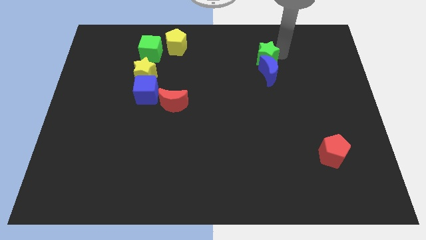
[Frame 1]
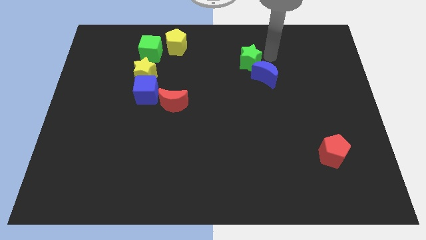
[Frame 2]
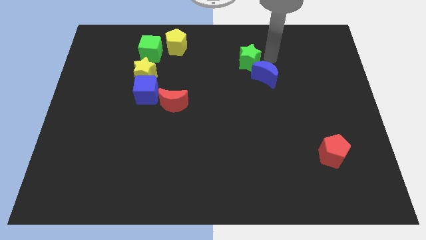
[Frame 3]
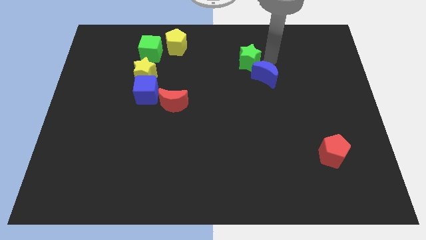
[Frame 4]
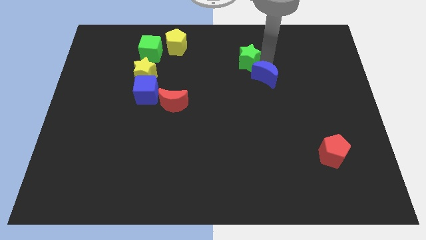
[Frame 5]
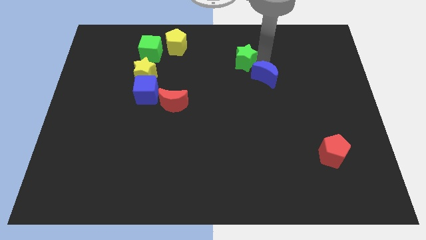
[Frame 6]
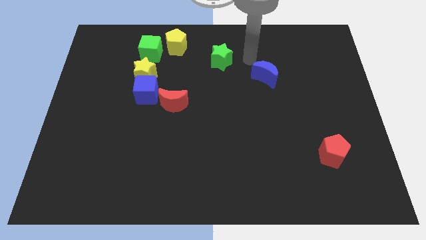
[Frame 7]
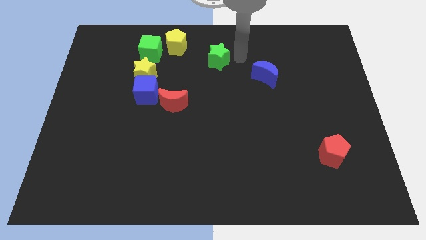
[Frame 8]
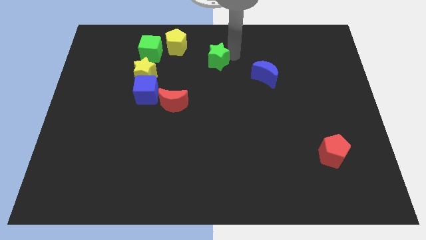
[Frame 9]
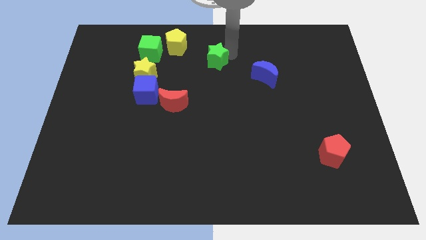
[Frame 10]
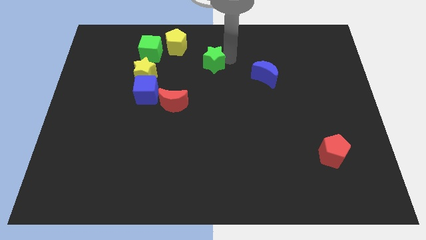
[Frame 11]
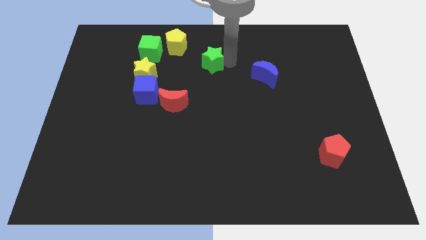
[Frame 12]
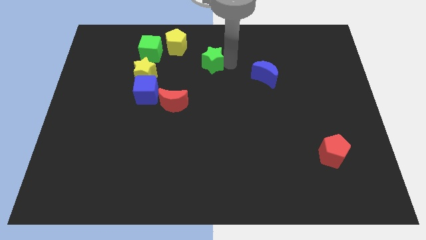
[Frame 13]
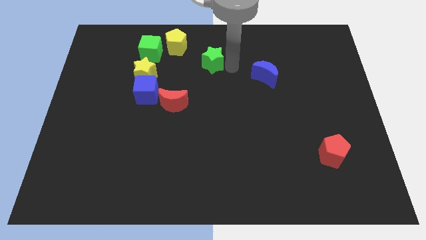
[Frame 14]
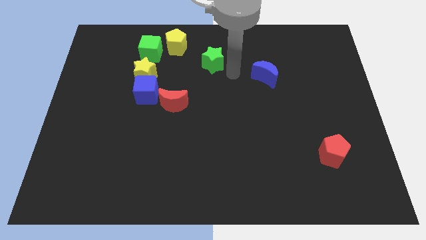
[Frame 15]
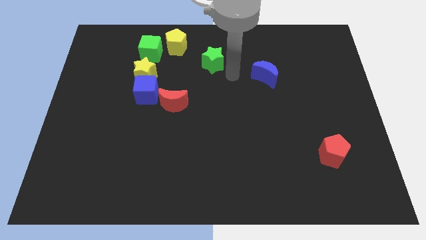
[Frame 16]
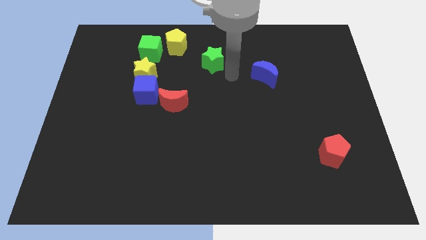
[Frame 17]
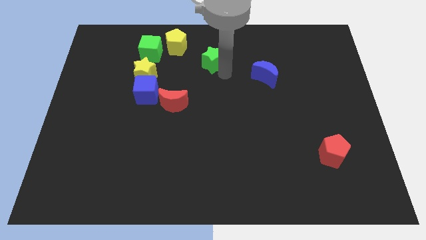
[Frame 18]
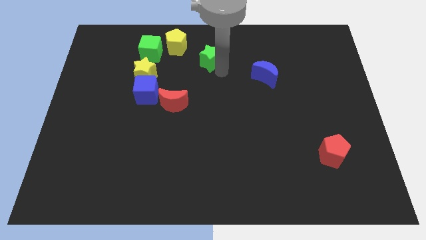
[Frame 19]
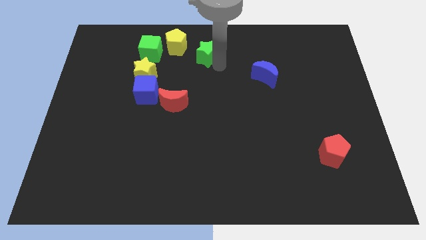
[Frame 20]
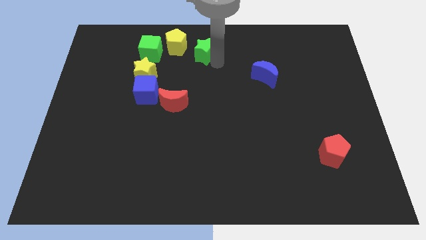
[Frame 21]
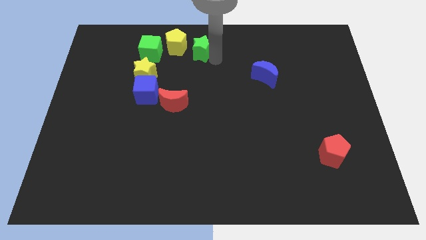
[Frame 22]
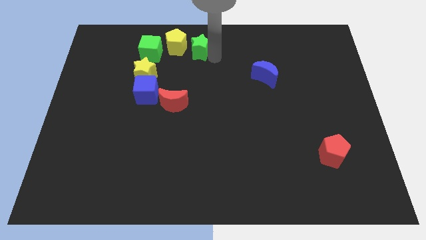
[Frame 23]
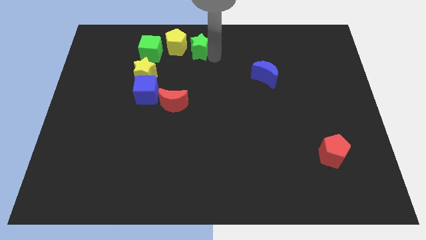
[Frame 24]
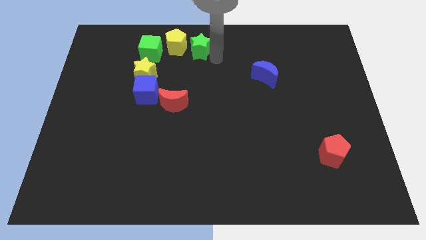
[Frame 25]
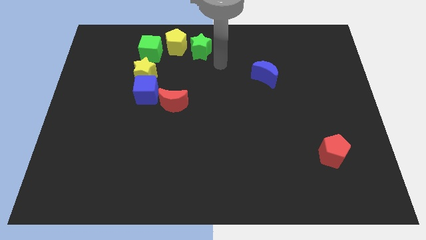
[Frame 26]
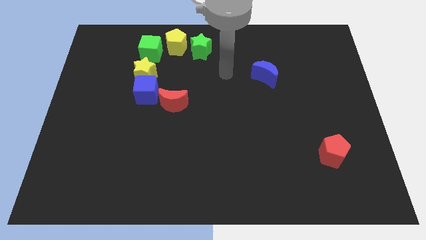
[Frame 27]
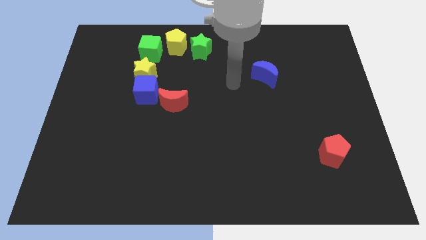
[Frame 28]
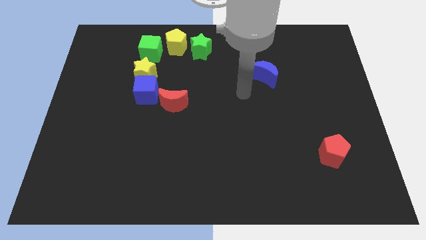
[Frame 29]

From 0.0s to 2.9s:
place green star to the right of the yellow pentagon

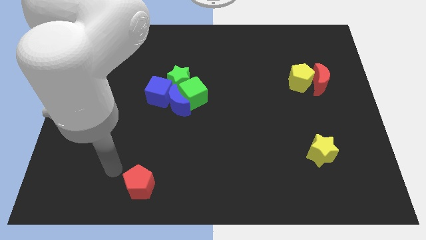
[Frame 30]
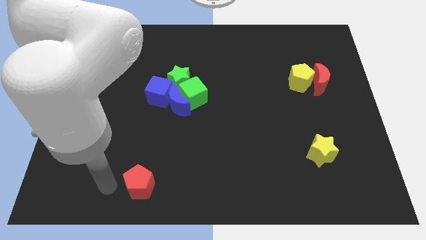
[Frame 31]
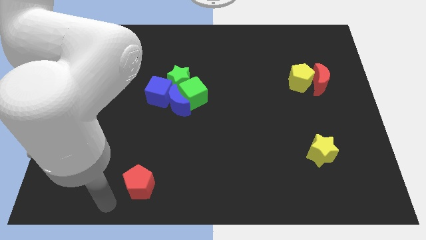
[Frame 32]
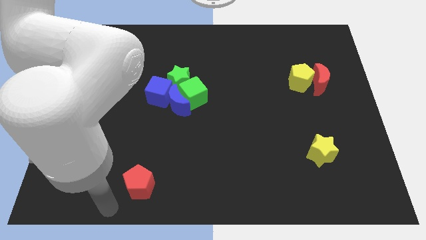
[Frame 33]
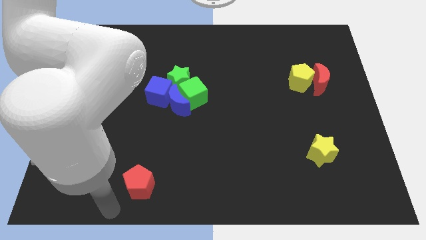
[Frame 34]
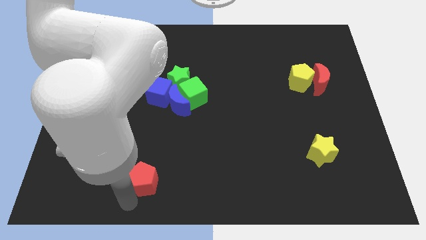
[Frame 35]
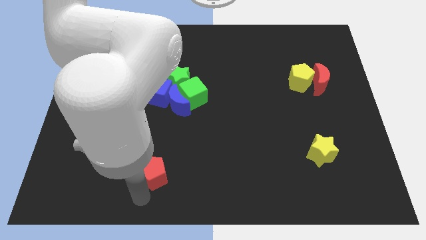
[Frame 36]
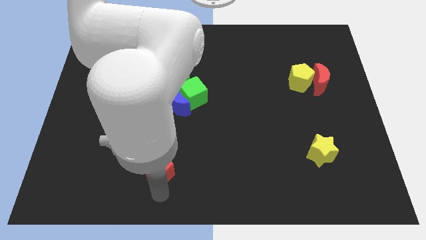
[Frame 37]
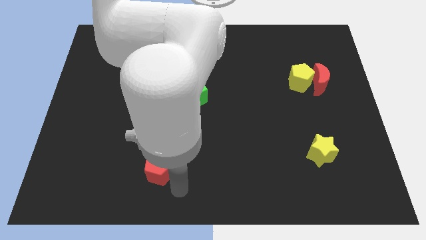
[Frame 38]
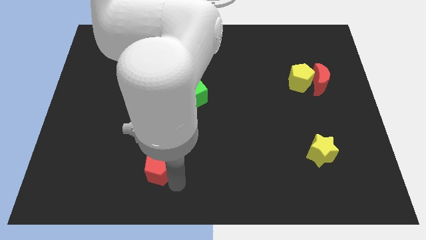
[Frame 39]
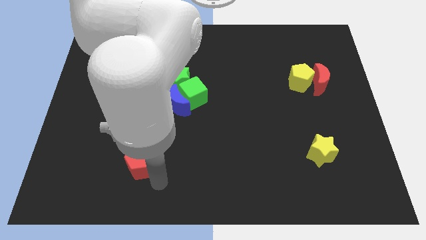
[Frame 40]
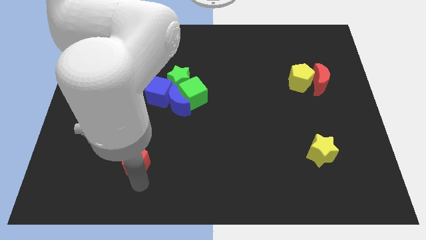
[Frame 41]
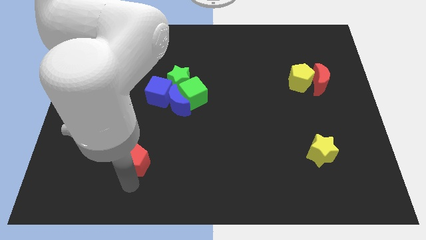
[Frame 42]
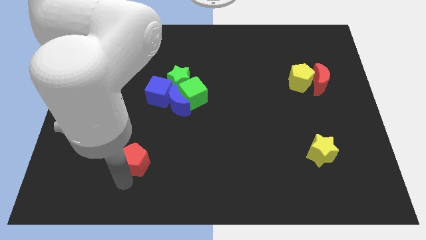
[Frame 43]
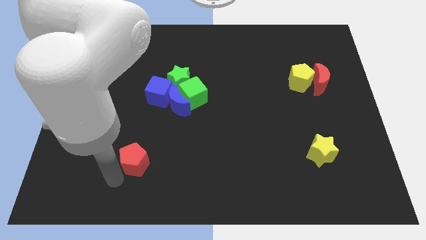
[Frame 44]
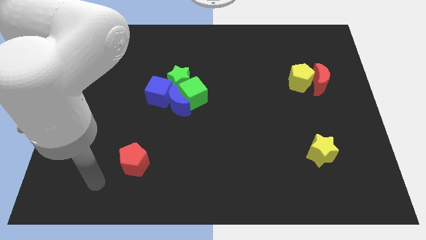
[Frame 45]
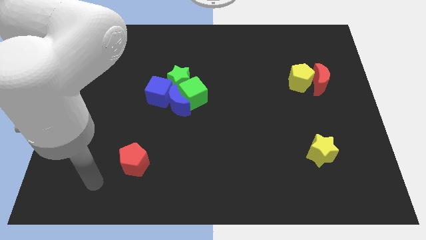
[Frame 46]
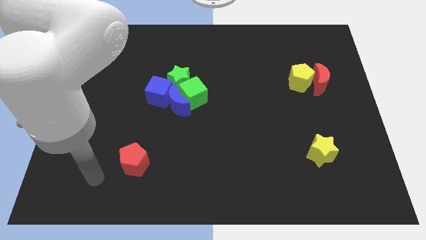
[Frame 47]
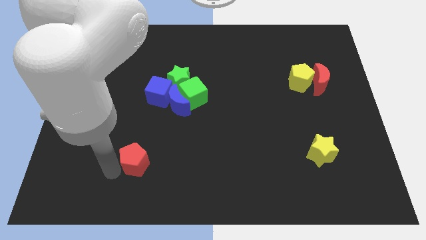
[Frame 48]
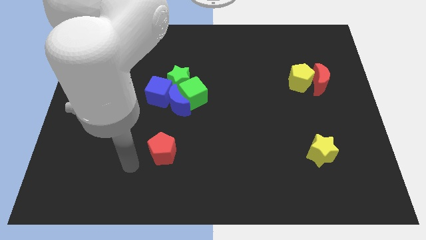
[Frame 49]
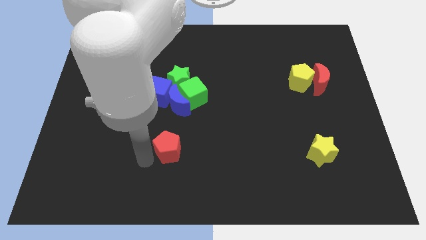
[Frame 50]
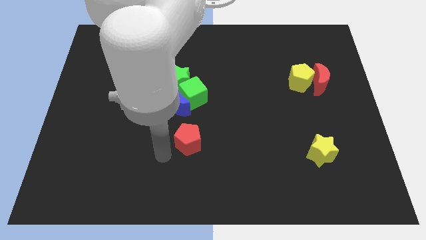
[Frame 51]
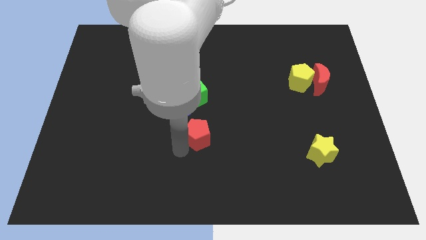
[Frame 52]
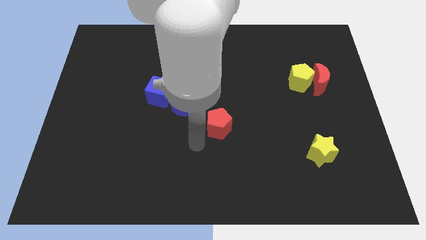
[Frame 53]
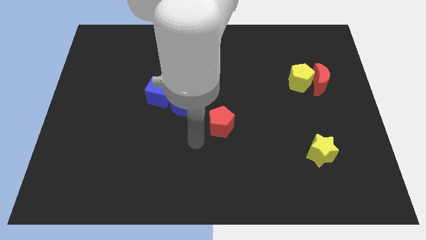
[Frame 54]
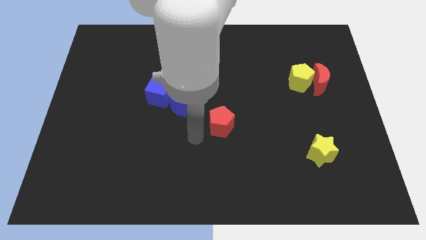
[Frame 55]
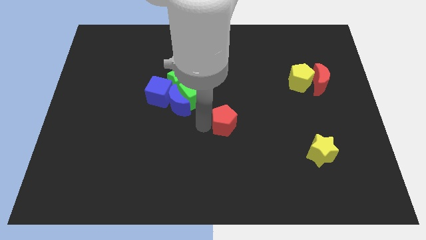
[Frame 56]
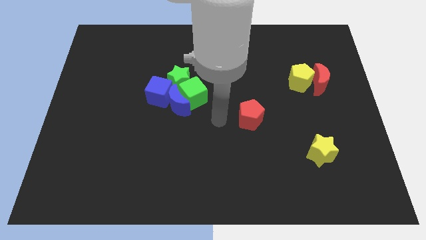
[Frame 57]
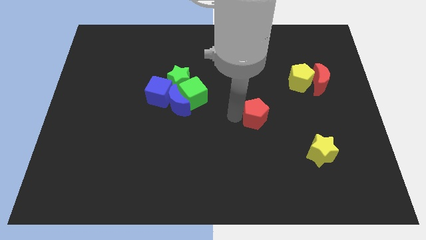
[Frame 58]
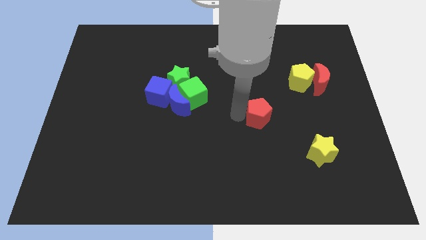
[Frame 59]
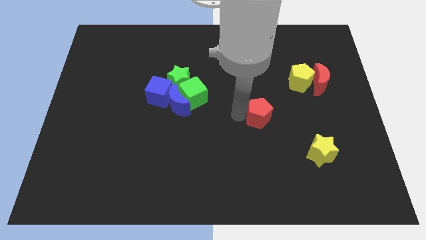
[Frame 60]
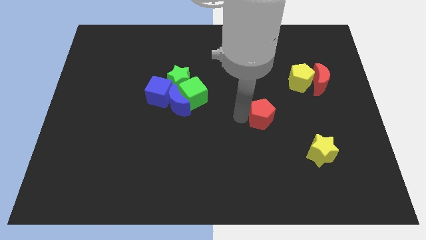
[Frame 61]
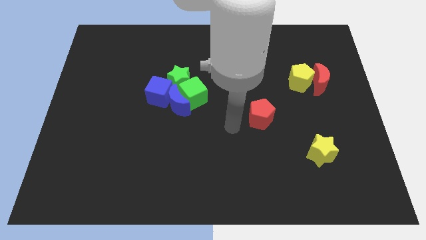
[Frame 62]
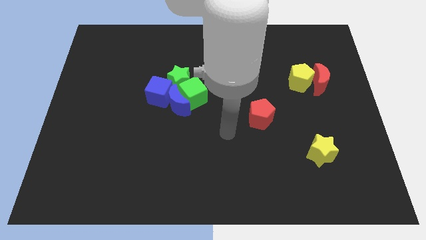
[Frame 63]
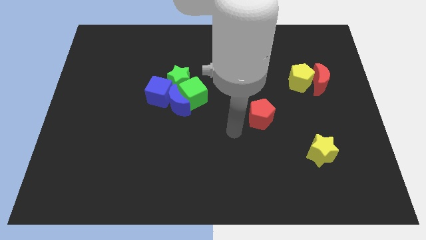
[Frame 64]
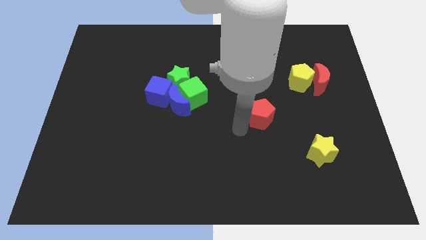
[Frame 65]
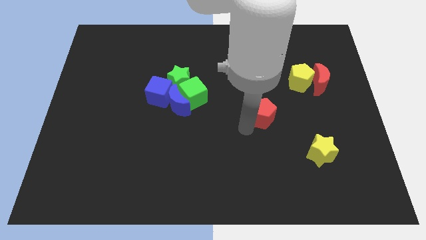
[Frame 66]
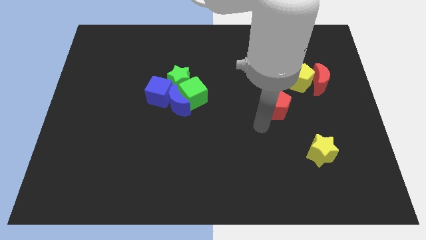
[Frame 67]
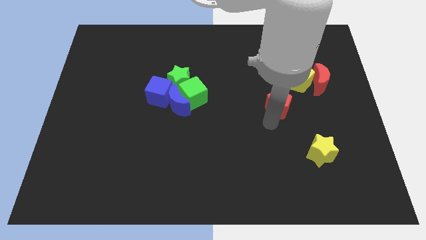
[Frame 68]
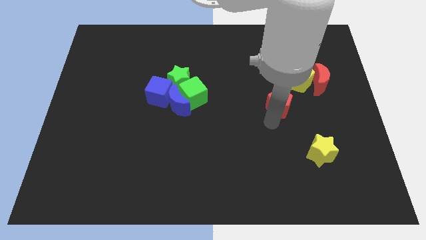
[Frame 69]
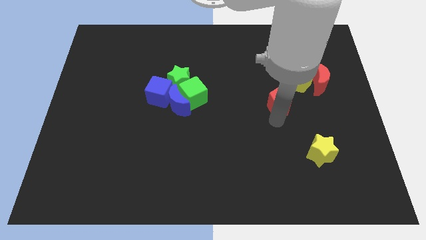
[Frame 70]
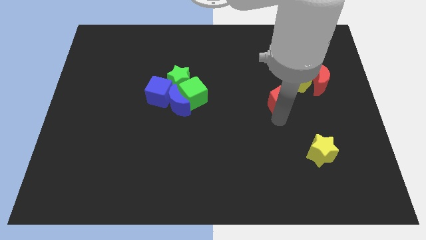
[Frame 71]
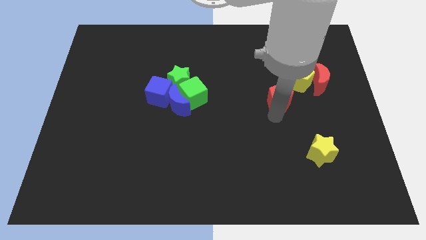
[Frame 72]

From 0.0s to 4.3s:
move the red pentagon close to the yellow pentagon

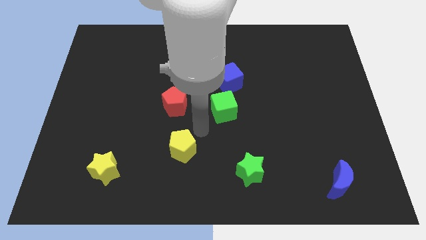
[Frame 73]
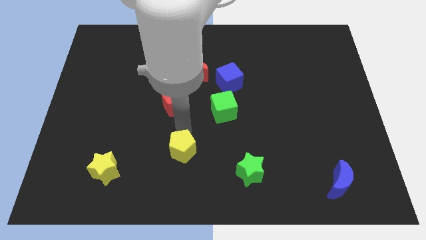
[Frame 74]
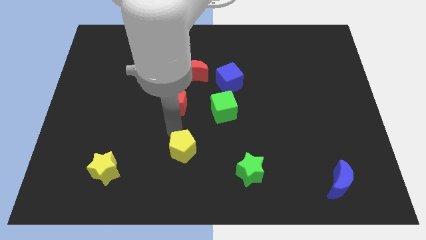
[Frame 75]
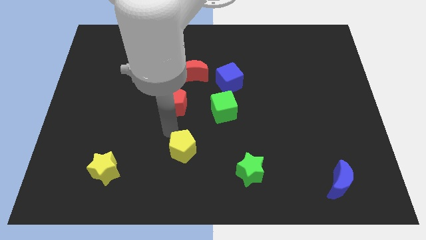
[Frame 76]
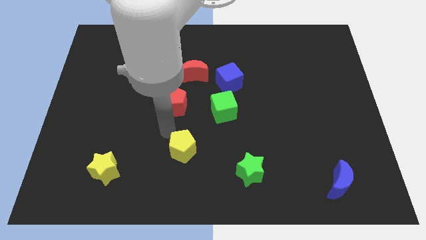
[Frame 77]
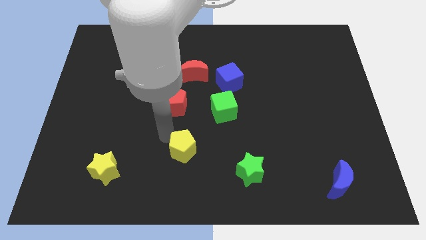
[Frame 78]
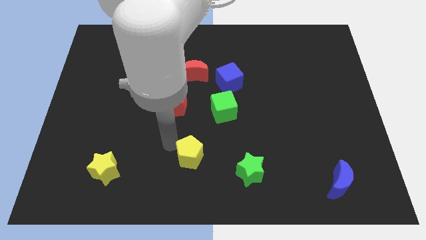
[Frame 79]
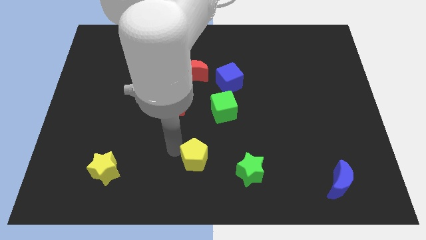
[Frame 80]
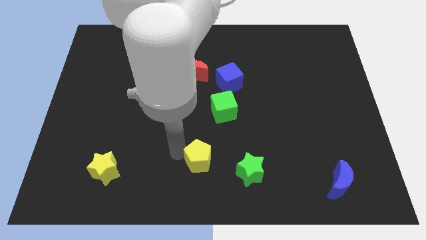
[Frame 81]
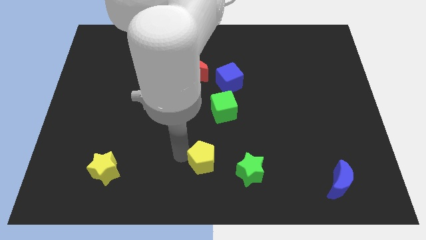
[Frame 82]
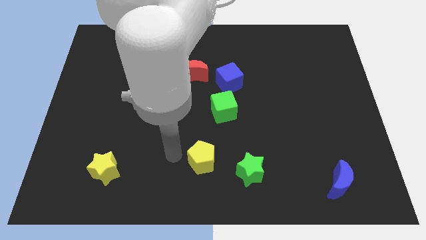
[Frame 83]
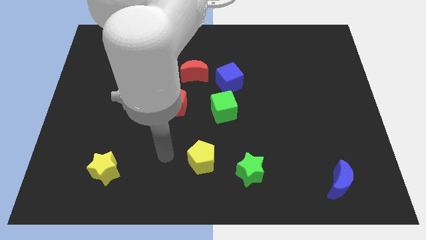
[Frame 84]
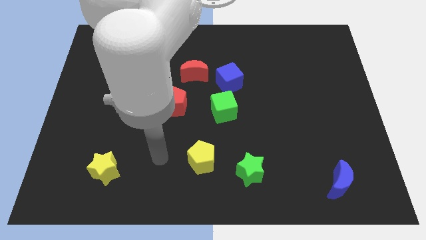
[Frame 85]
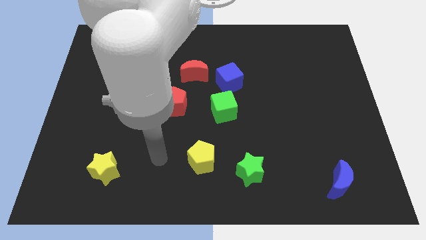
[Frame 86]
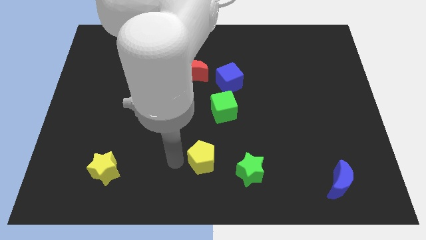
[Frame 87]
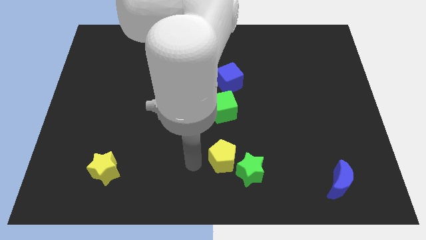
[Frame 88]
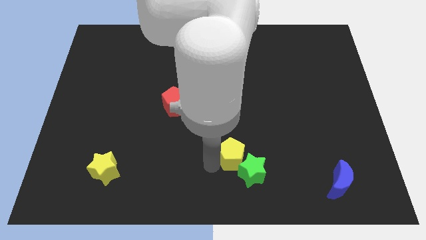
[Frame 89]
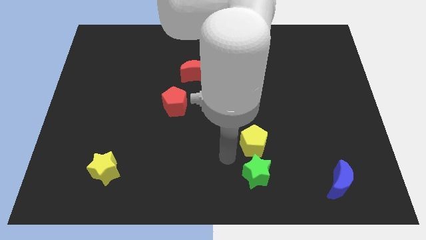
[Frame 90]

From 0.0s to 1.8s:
move the yellow pentagon to the top of the green star
